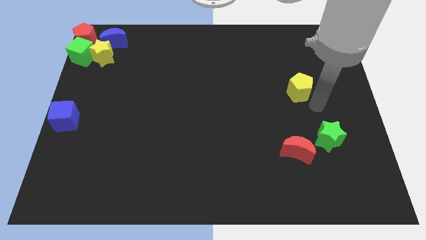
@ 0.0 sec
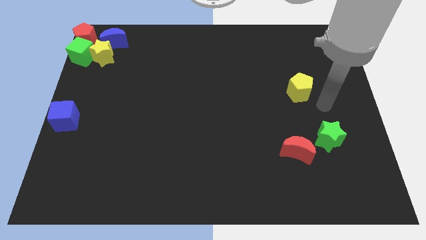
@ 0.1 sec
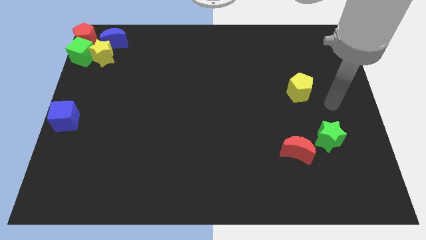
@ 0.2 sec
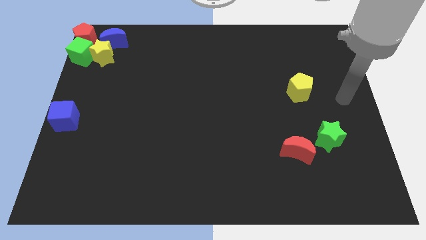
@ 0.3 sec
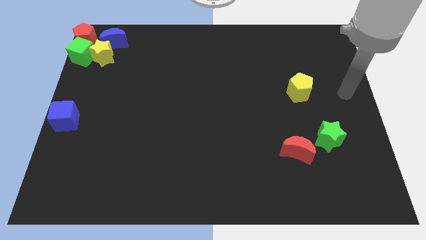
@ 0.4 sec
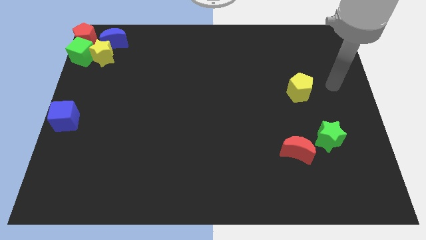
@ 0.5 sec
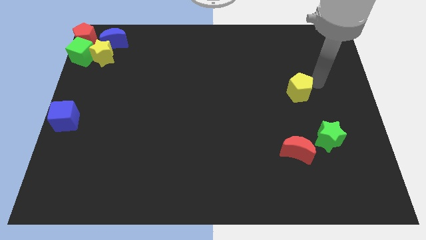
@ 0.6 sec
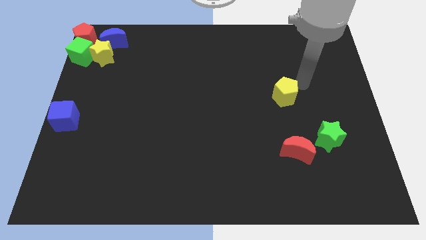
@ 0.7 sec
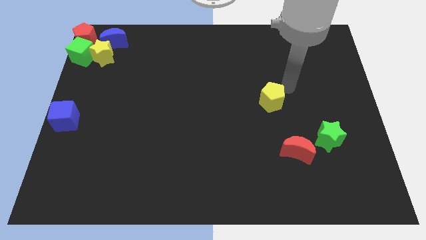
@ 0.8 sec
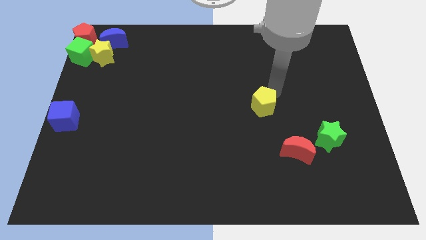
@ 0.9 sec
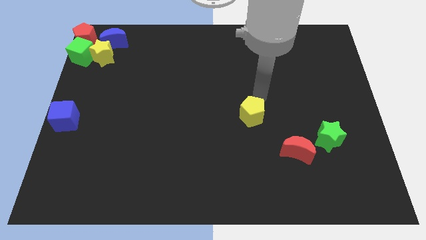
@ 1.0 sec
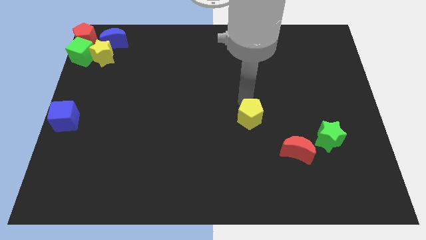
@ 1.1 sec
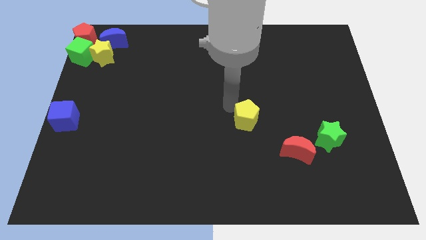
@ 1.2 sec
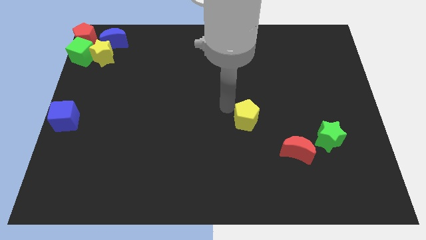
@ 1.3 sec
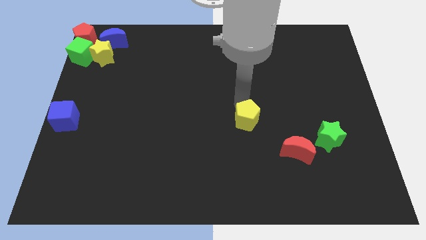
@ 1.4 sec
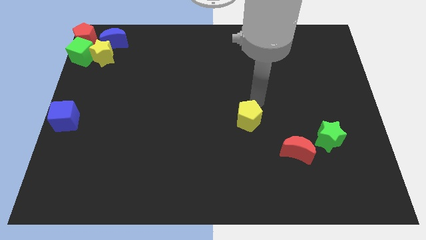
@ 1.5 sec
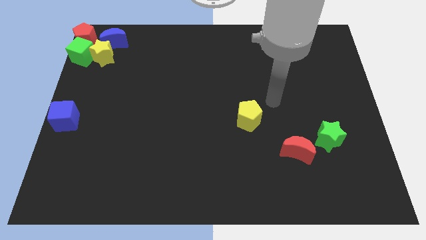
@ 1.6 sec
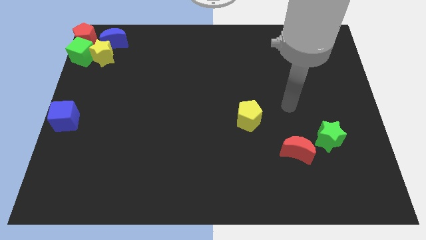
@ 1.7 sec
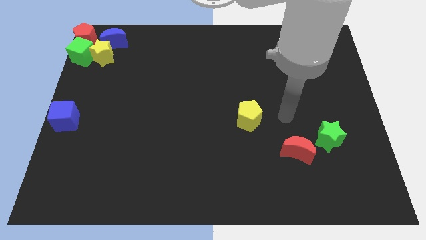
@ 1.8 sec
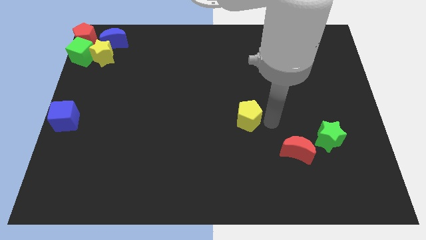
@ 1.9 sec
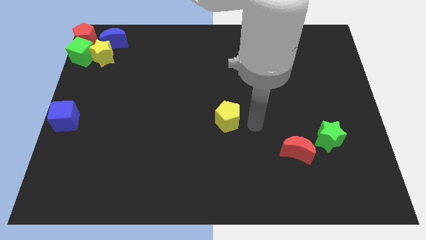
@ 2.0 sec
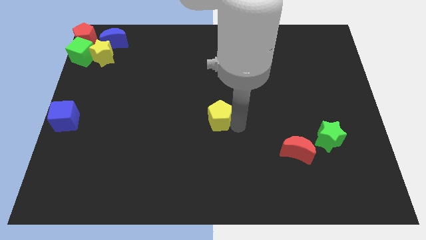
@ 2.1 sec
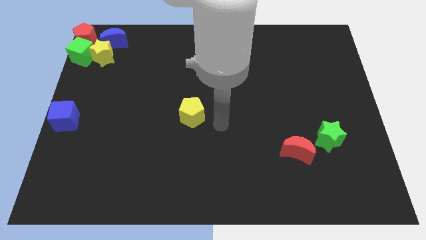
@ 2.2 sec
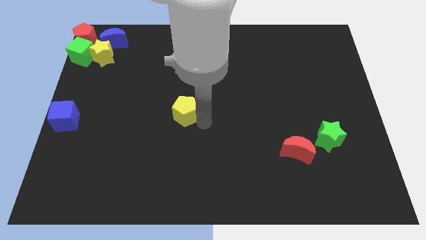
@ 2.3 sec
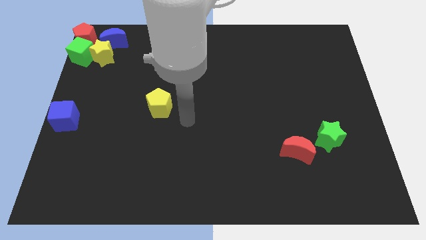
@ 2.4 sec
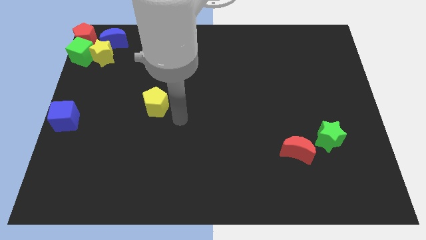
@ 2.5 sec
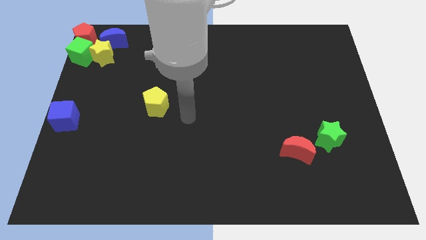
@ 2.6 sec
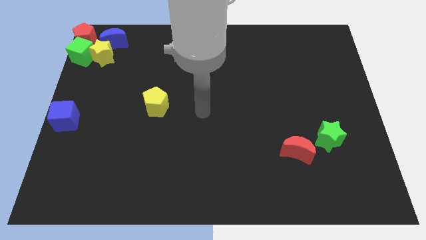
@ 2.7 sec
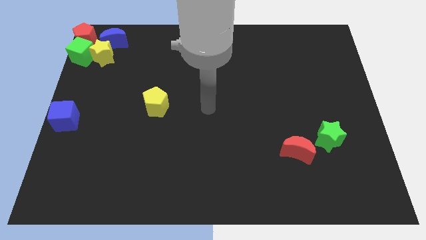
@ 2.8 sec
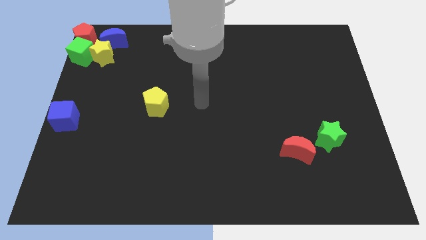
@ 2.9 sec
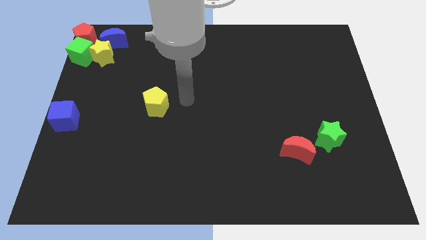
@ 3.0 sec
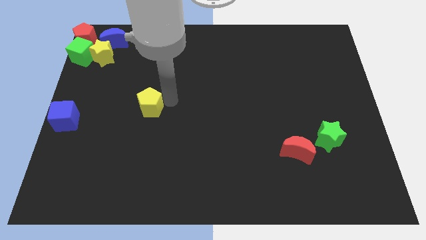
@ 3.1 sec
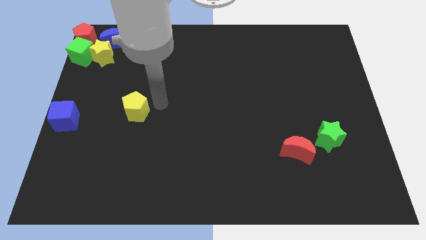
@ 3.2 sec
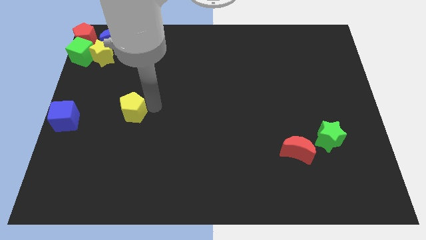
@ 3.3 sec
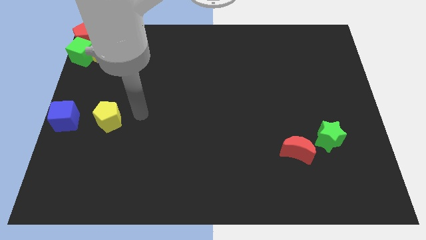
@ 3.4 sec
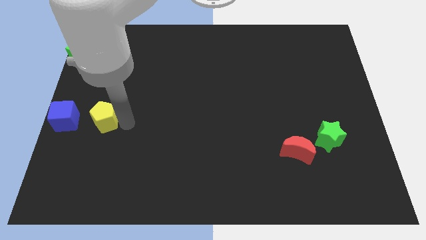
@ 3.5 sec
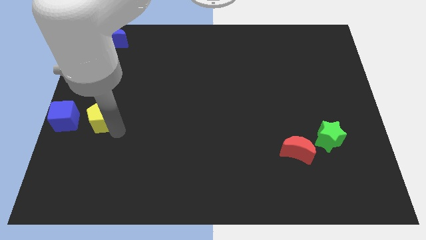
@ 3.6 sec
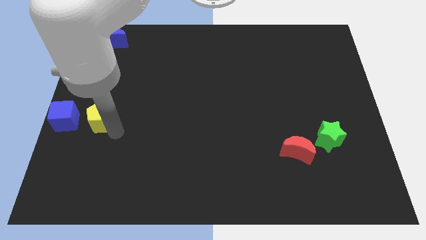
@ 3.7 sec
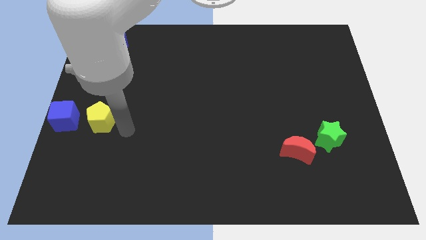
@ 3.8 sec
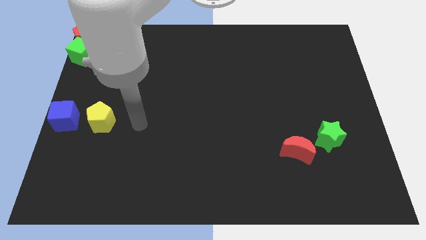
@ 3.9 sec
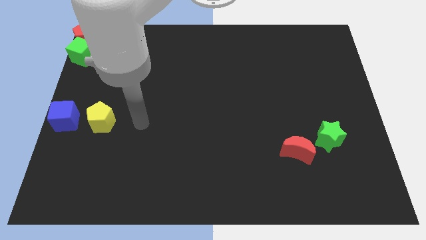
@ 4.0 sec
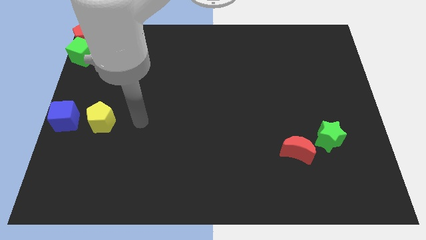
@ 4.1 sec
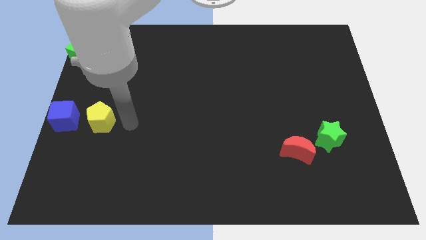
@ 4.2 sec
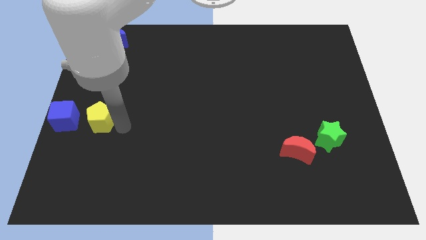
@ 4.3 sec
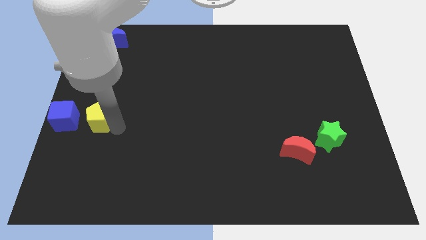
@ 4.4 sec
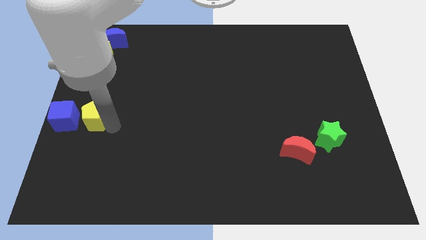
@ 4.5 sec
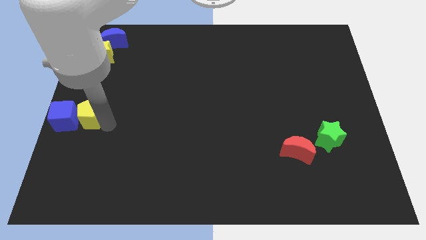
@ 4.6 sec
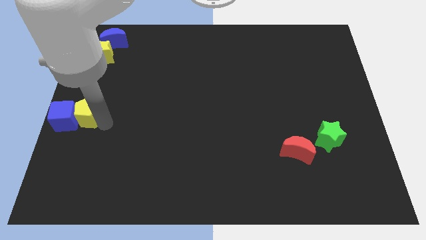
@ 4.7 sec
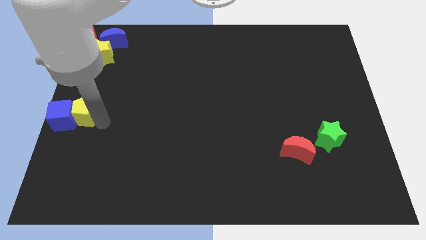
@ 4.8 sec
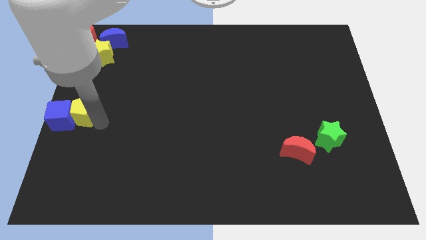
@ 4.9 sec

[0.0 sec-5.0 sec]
push yellow pentagon close to blue cube

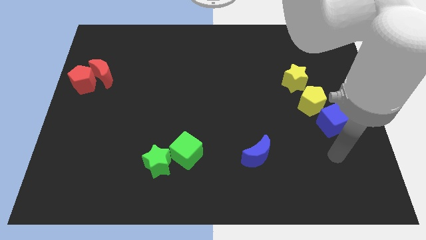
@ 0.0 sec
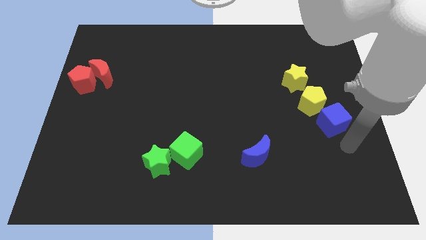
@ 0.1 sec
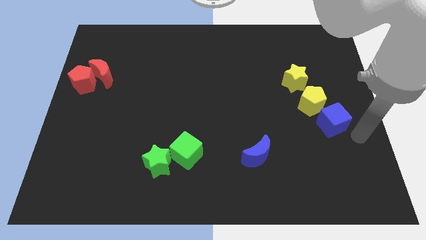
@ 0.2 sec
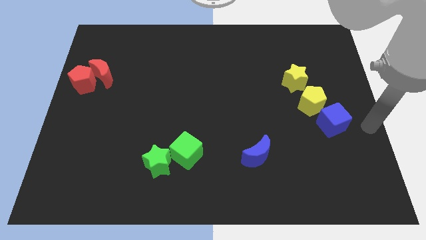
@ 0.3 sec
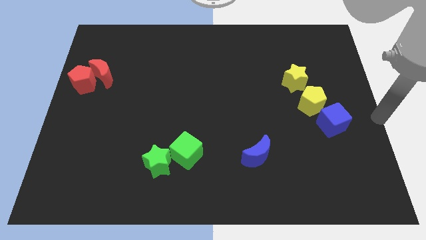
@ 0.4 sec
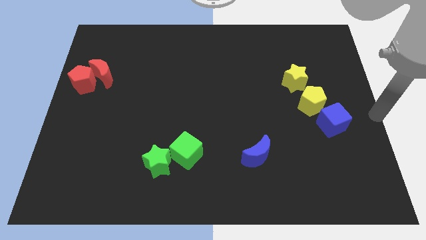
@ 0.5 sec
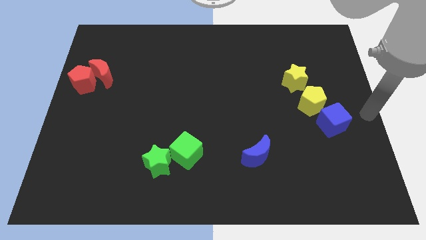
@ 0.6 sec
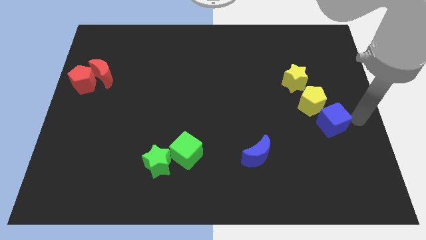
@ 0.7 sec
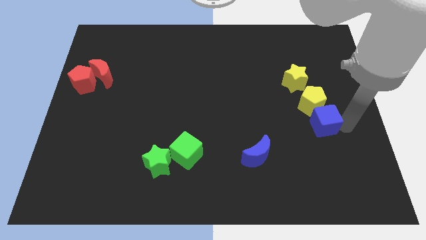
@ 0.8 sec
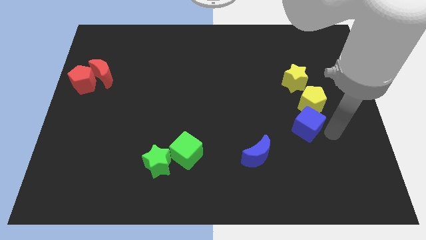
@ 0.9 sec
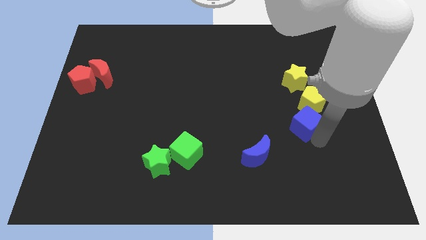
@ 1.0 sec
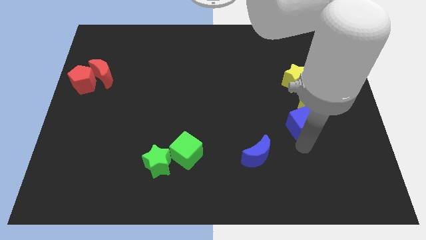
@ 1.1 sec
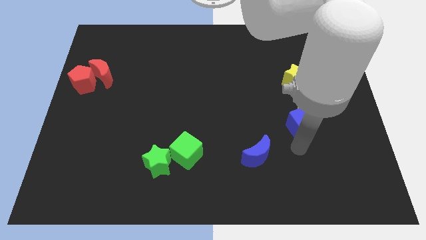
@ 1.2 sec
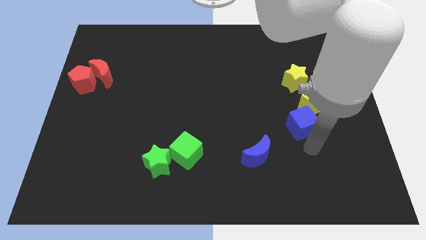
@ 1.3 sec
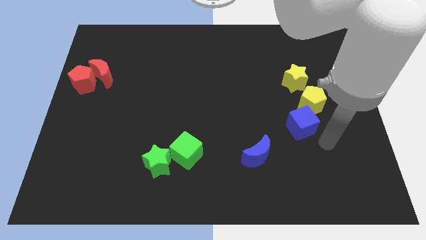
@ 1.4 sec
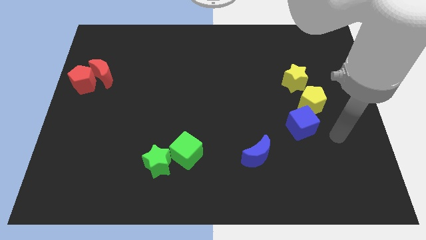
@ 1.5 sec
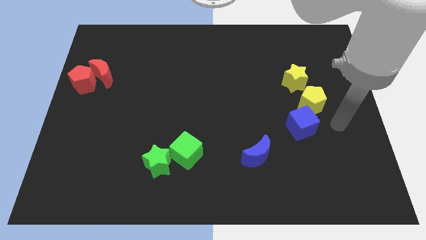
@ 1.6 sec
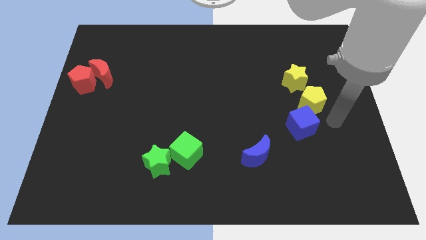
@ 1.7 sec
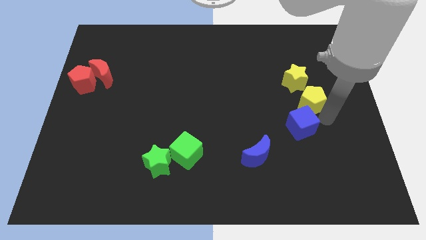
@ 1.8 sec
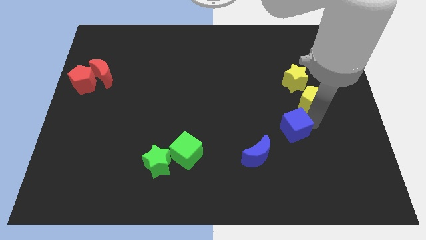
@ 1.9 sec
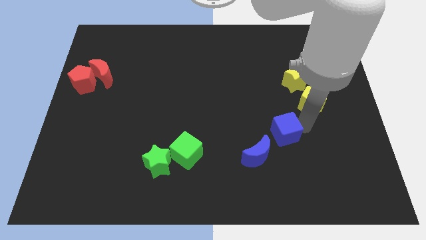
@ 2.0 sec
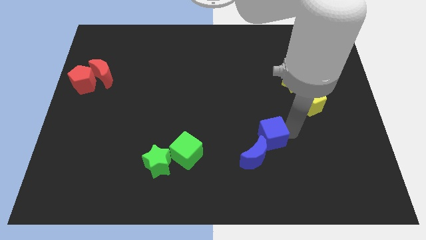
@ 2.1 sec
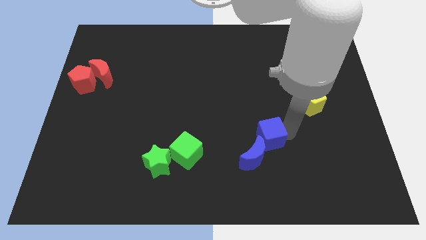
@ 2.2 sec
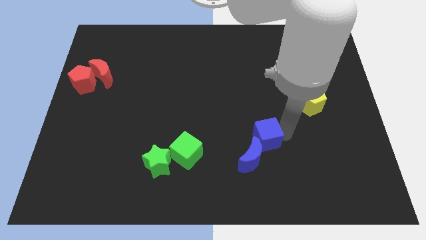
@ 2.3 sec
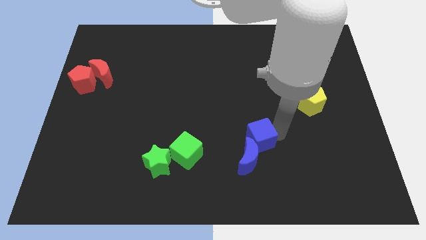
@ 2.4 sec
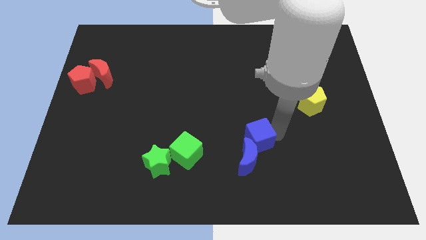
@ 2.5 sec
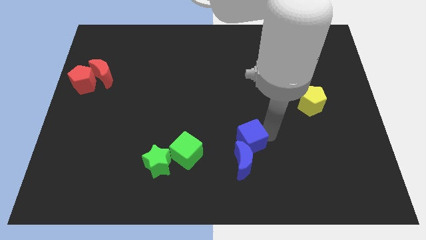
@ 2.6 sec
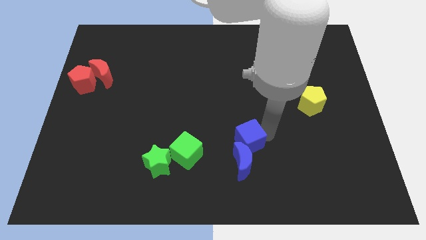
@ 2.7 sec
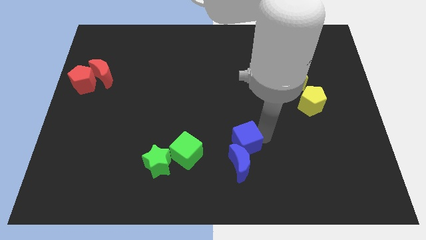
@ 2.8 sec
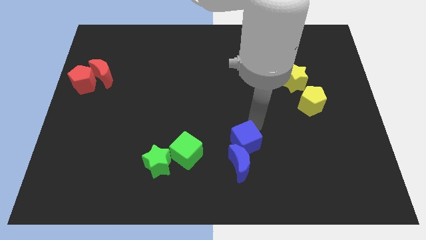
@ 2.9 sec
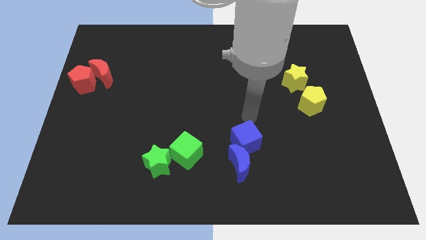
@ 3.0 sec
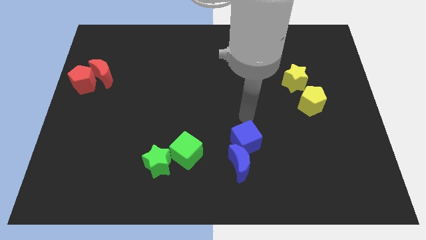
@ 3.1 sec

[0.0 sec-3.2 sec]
push the blue cube into the blue moon

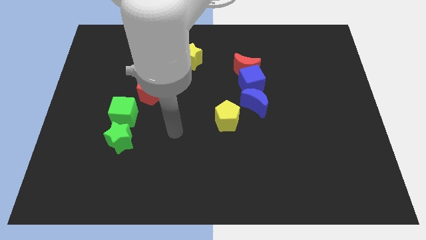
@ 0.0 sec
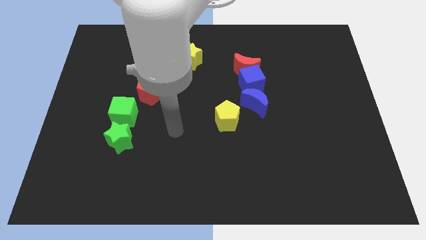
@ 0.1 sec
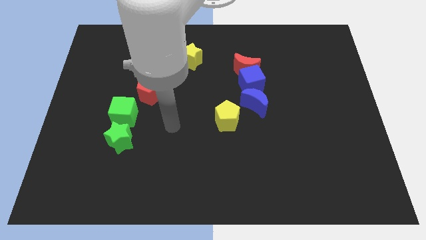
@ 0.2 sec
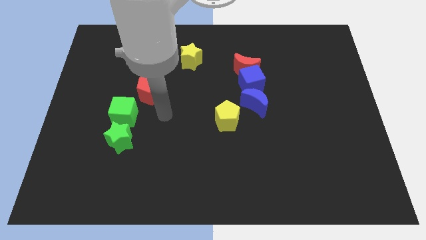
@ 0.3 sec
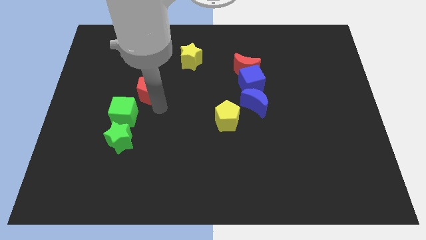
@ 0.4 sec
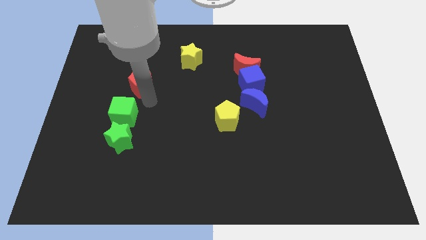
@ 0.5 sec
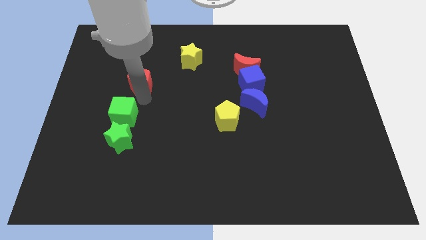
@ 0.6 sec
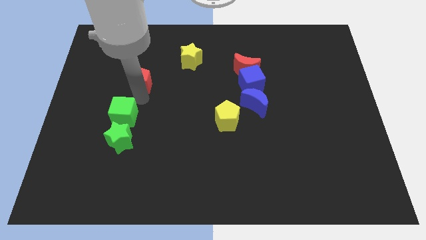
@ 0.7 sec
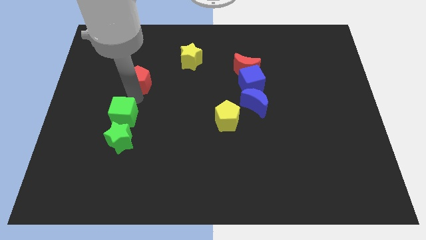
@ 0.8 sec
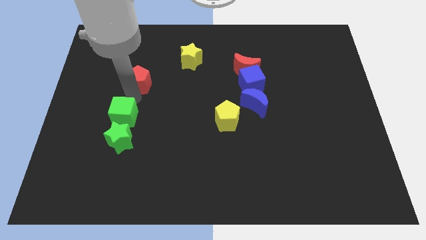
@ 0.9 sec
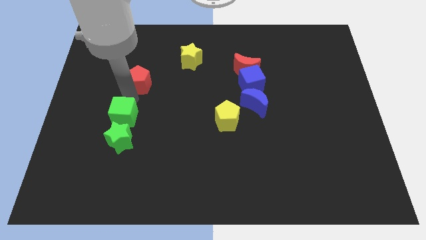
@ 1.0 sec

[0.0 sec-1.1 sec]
put the red pentagon above the green cube
